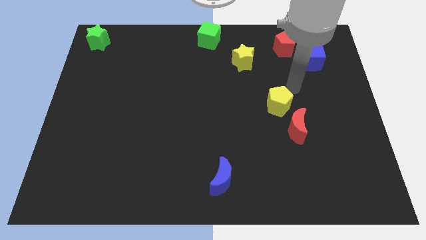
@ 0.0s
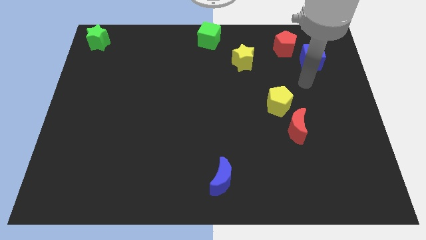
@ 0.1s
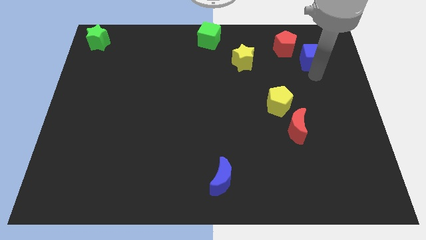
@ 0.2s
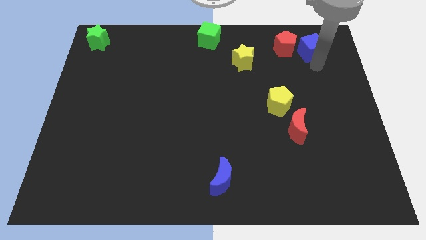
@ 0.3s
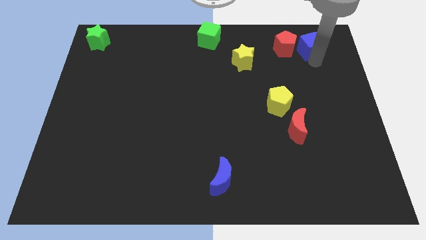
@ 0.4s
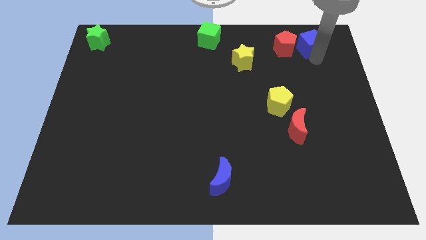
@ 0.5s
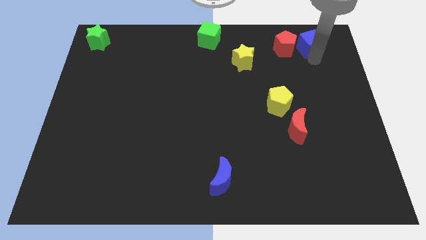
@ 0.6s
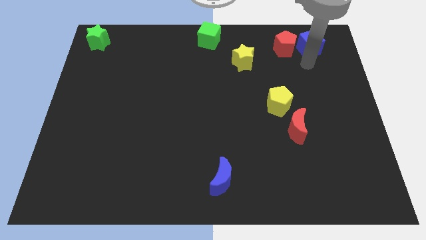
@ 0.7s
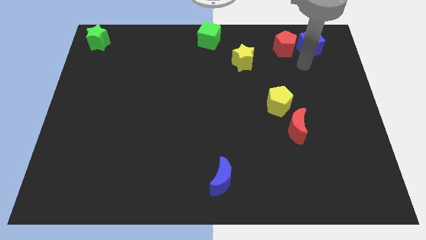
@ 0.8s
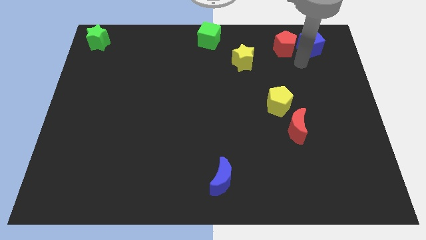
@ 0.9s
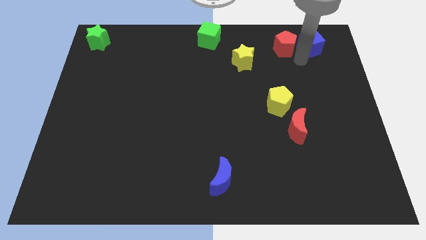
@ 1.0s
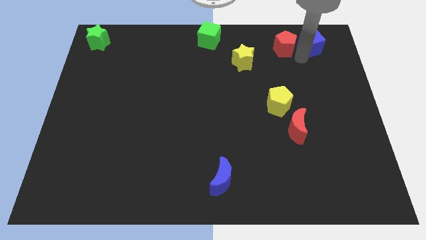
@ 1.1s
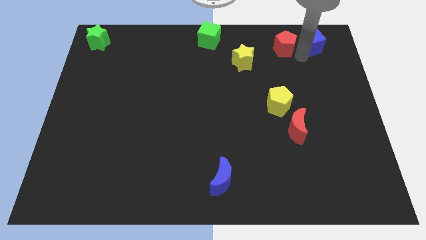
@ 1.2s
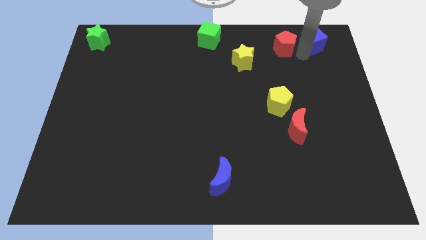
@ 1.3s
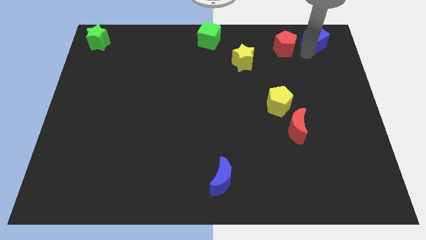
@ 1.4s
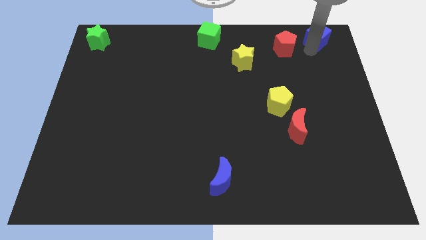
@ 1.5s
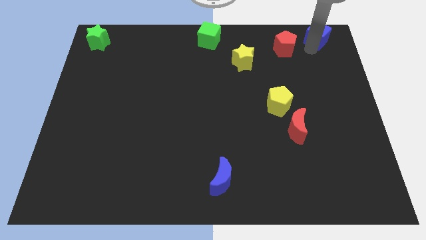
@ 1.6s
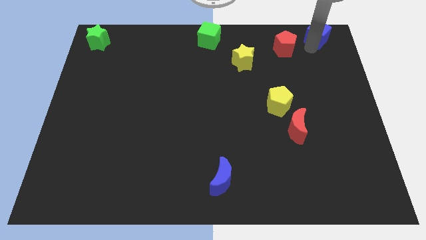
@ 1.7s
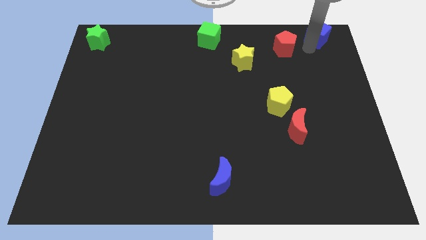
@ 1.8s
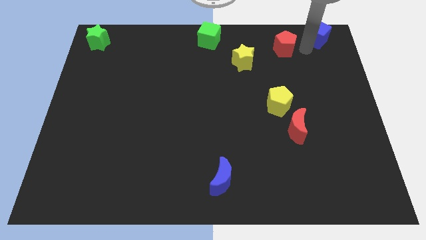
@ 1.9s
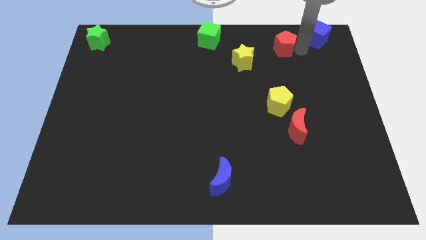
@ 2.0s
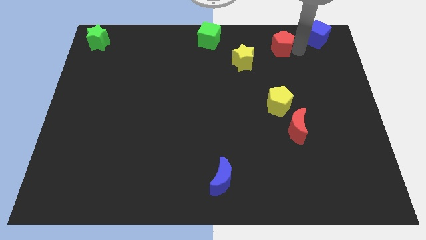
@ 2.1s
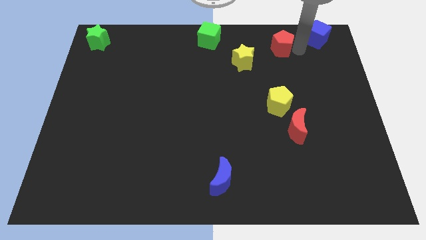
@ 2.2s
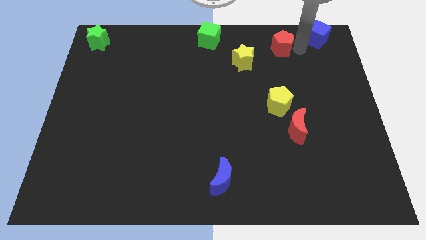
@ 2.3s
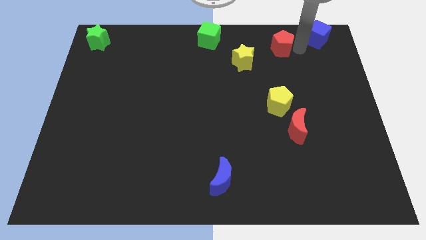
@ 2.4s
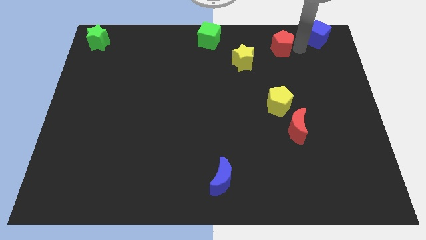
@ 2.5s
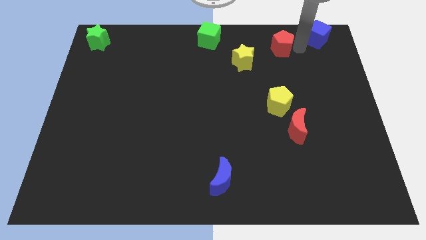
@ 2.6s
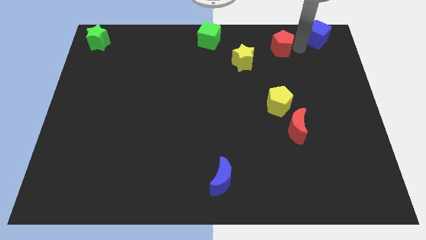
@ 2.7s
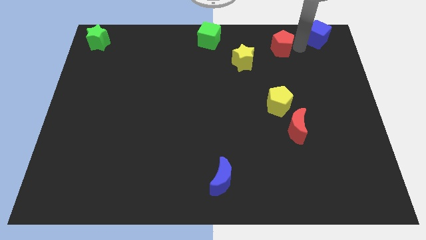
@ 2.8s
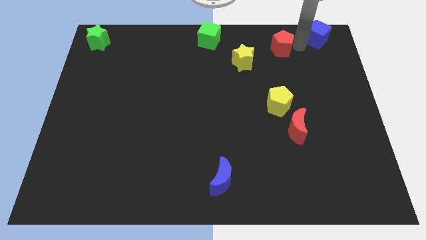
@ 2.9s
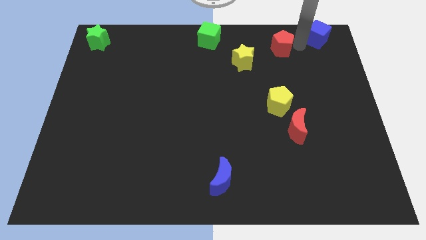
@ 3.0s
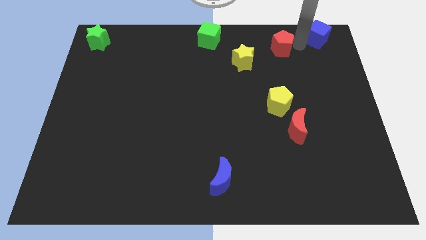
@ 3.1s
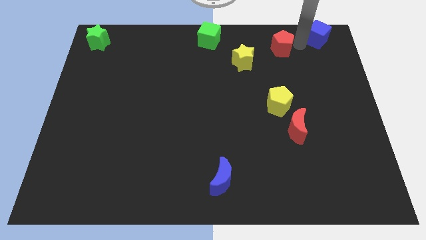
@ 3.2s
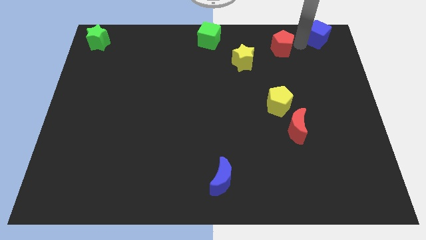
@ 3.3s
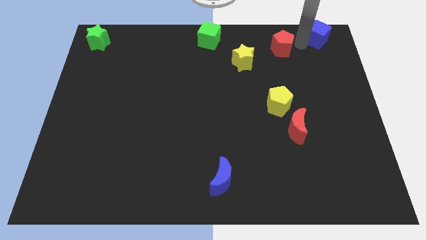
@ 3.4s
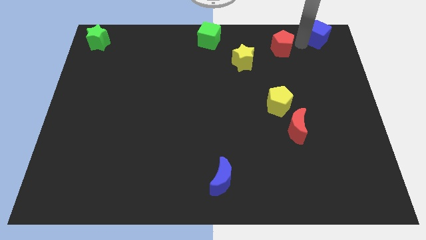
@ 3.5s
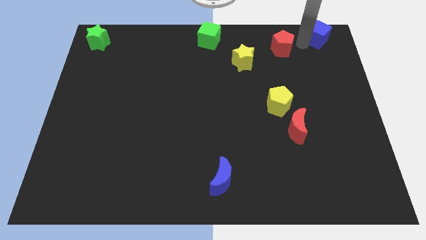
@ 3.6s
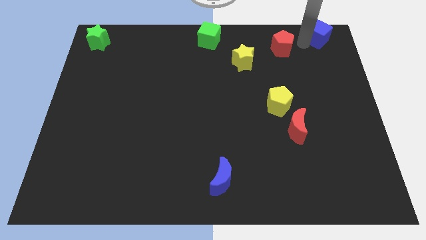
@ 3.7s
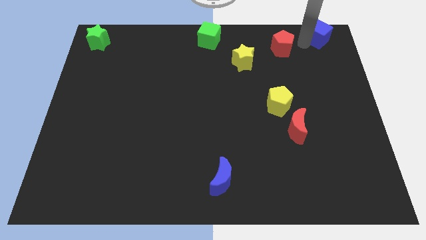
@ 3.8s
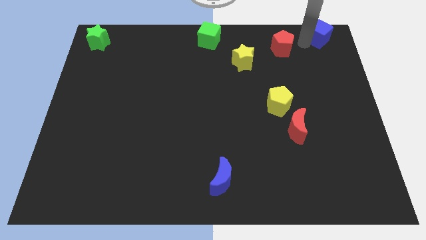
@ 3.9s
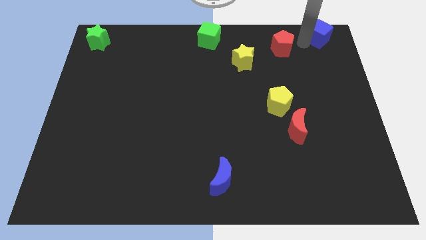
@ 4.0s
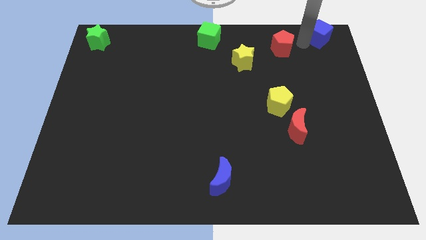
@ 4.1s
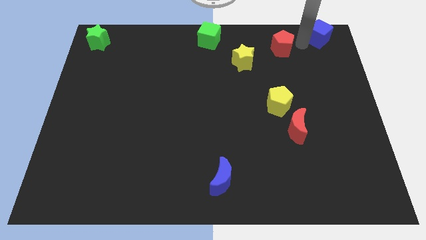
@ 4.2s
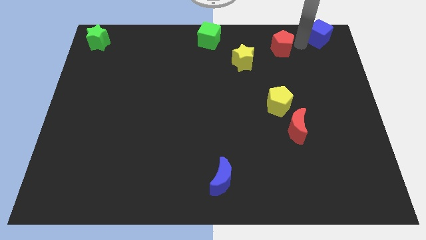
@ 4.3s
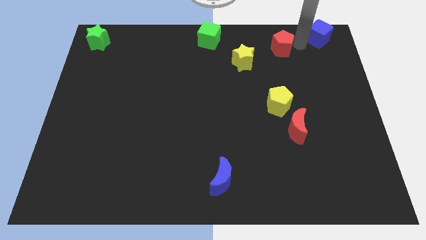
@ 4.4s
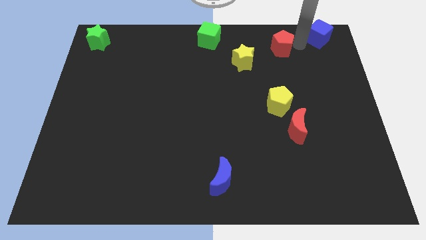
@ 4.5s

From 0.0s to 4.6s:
push the blue cube to the top right of the board

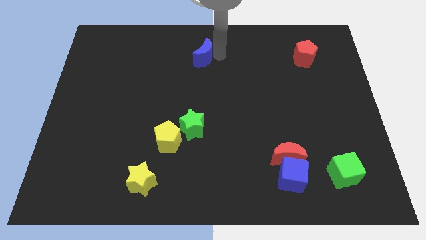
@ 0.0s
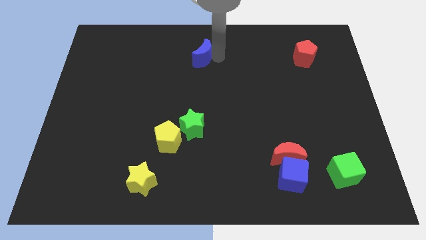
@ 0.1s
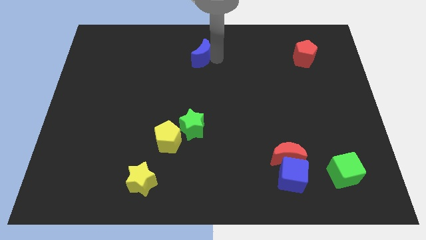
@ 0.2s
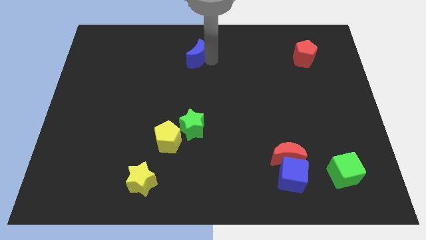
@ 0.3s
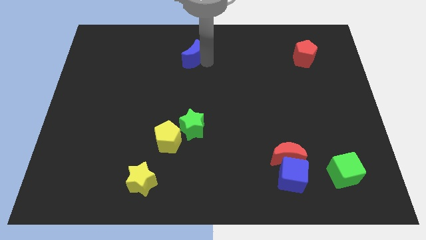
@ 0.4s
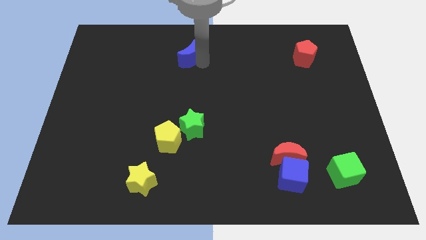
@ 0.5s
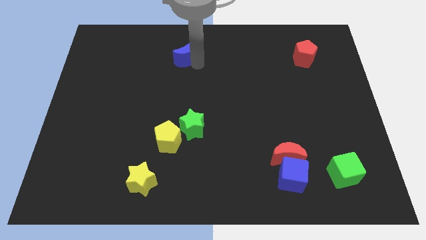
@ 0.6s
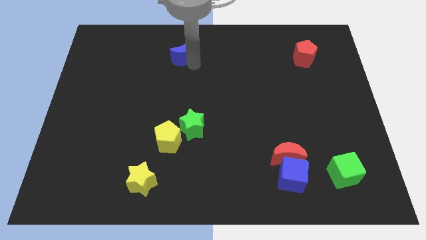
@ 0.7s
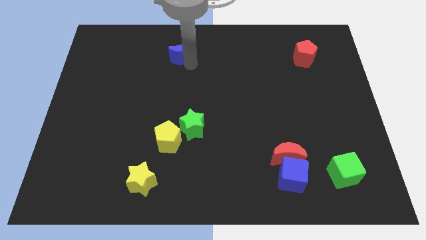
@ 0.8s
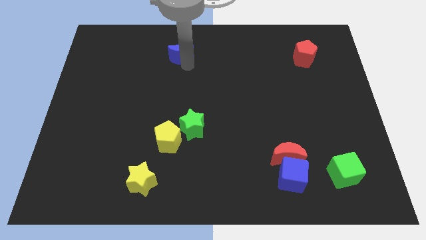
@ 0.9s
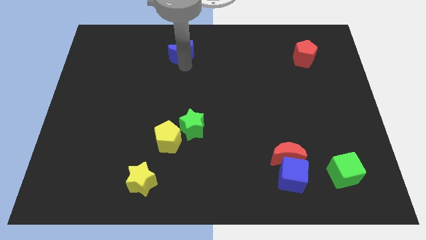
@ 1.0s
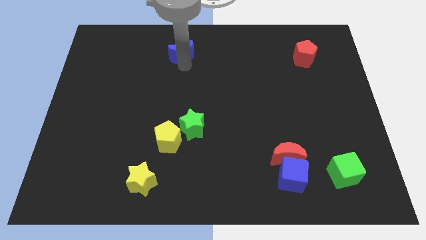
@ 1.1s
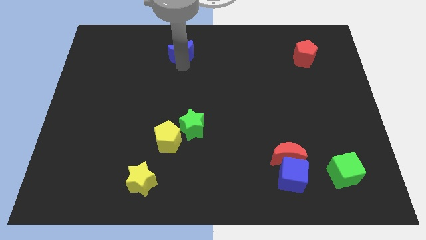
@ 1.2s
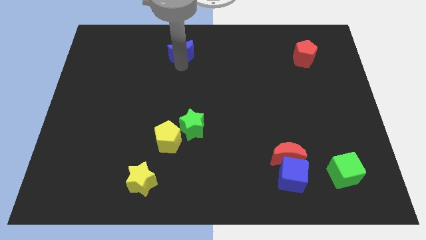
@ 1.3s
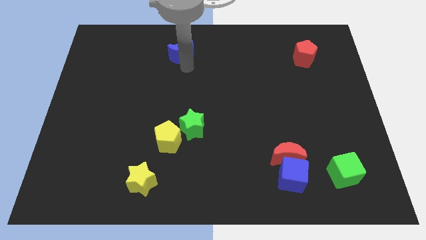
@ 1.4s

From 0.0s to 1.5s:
slightly turn the blue moon

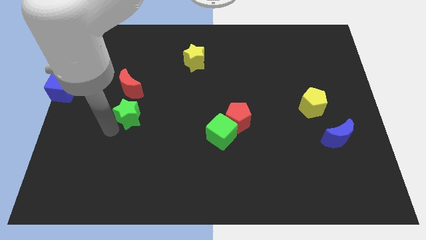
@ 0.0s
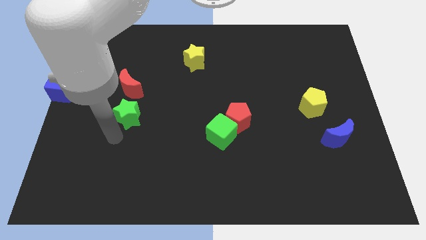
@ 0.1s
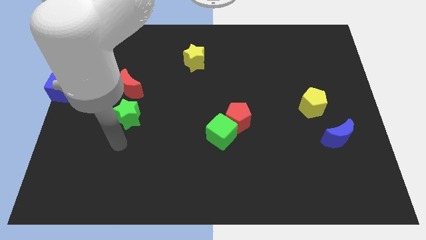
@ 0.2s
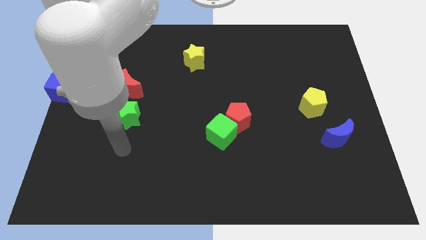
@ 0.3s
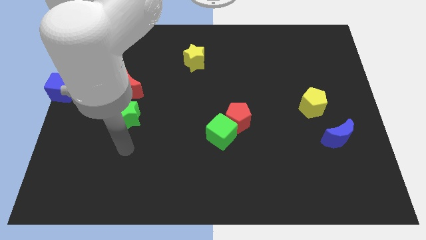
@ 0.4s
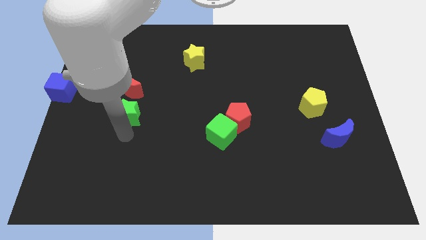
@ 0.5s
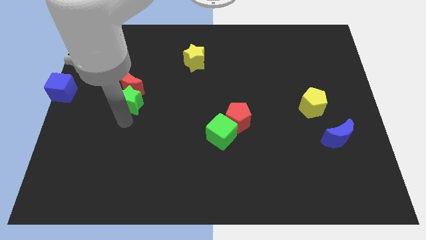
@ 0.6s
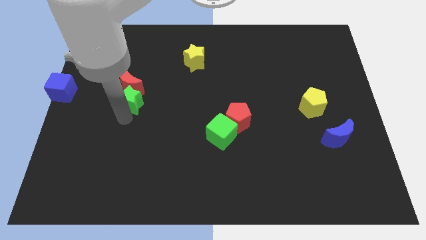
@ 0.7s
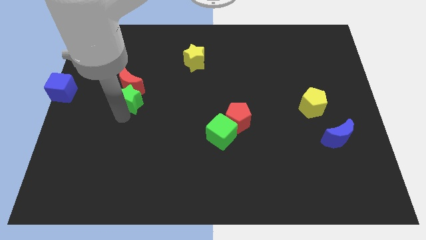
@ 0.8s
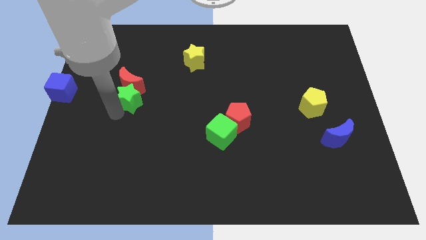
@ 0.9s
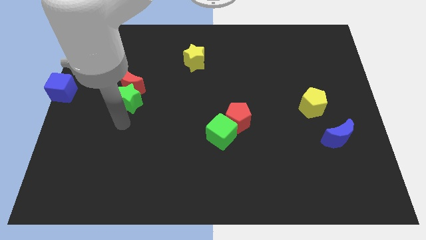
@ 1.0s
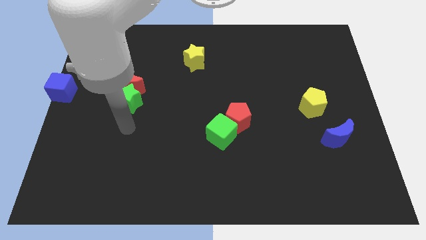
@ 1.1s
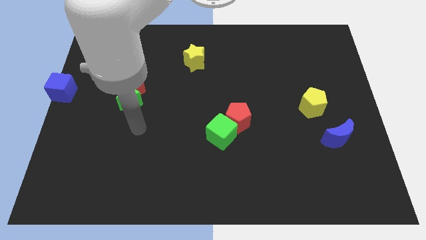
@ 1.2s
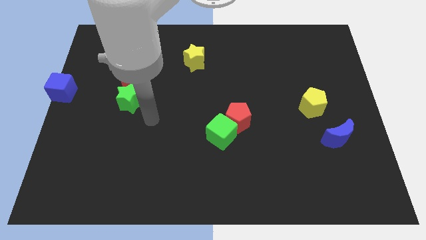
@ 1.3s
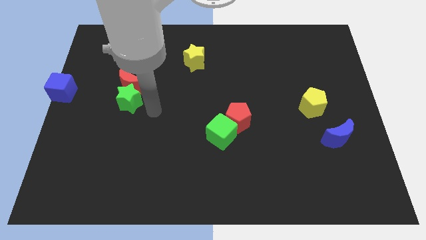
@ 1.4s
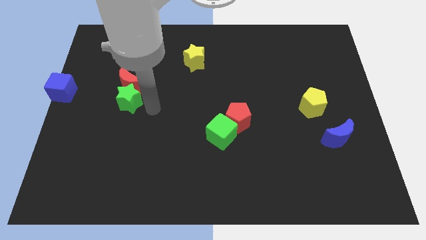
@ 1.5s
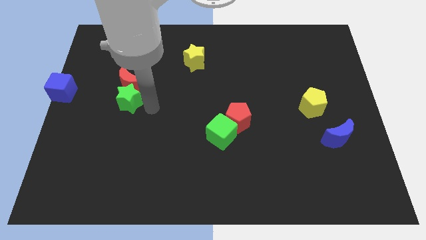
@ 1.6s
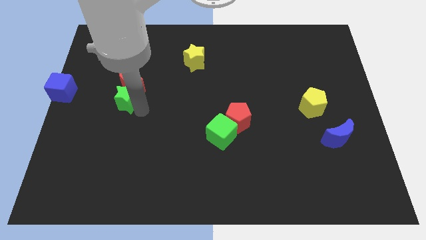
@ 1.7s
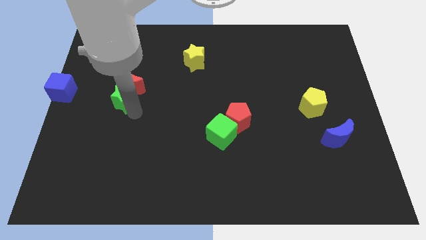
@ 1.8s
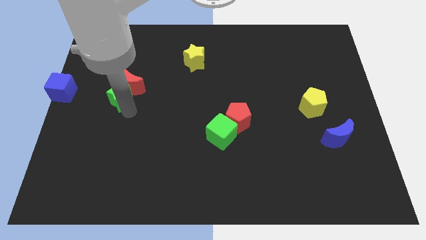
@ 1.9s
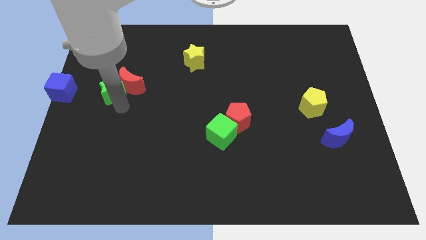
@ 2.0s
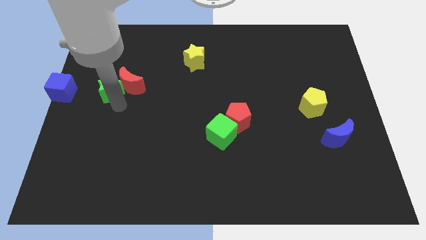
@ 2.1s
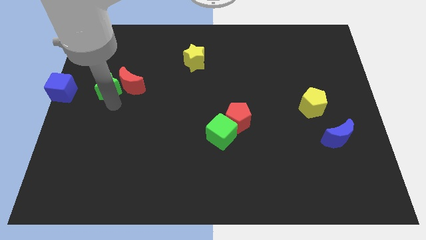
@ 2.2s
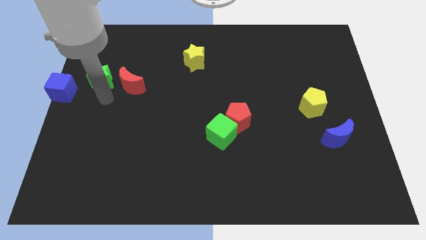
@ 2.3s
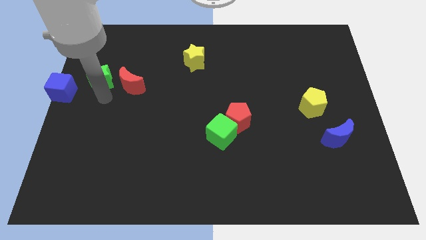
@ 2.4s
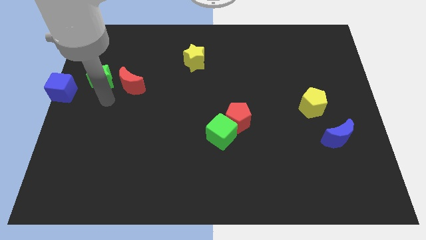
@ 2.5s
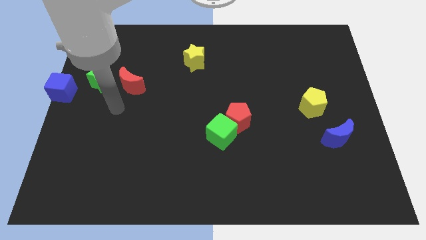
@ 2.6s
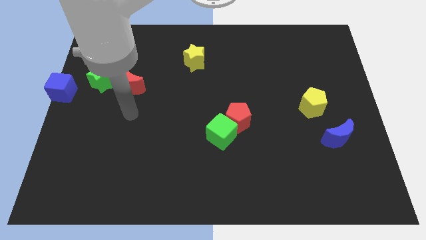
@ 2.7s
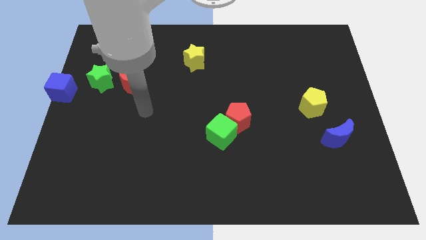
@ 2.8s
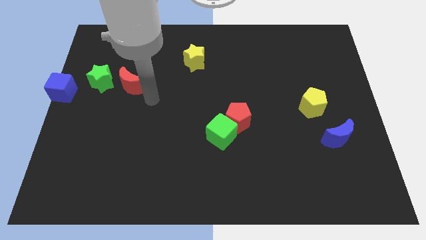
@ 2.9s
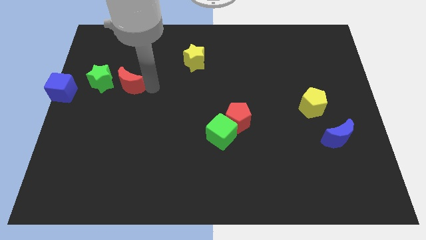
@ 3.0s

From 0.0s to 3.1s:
move green star near blue cube
